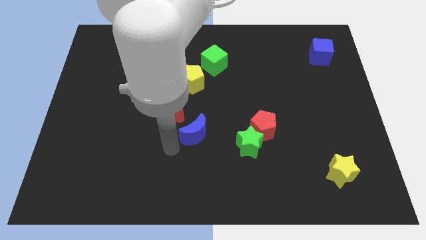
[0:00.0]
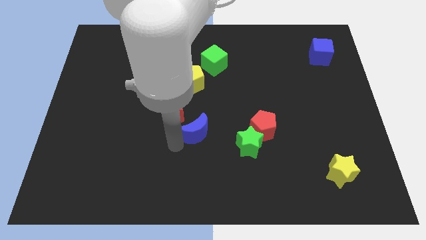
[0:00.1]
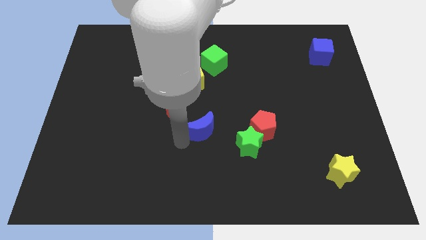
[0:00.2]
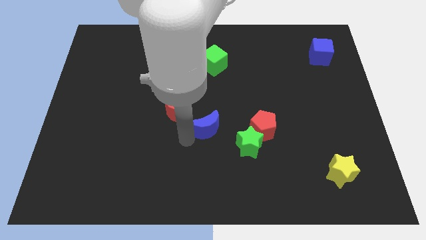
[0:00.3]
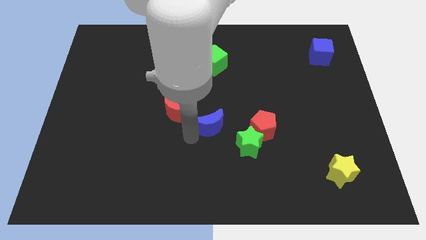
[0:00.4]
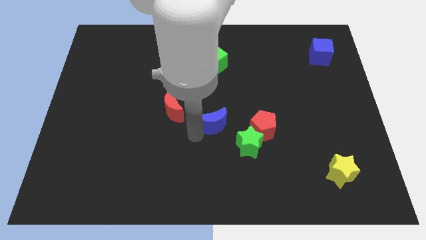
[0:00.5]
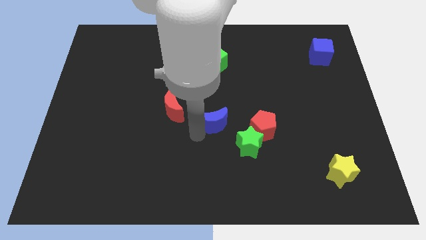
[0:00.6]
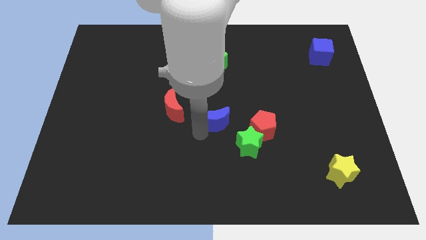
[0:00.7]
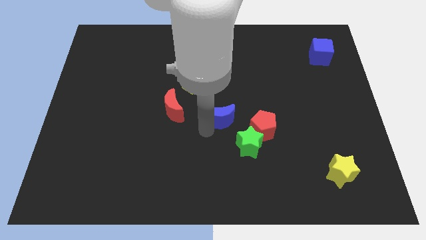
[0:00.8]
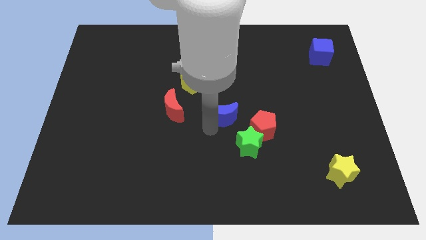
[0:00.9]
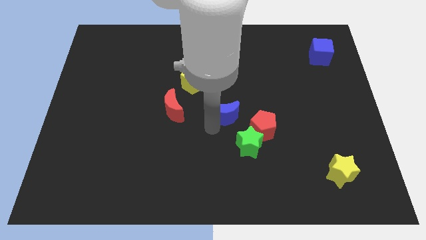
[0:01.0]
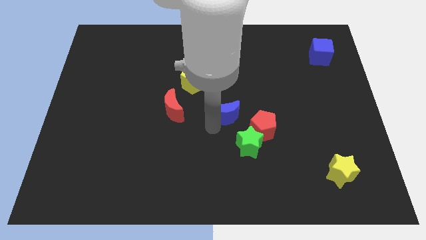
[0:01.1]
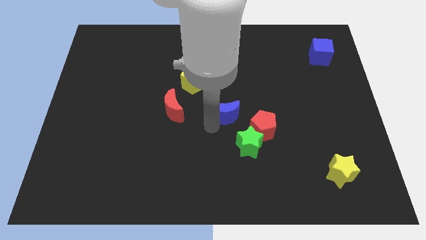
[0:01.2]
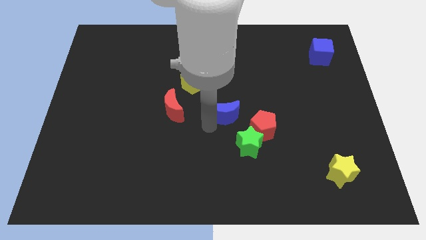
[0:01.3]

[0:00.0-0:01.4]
push blue crescent slightly upwards

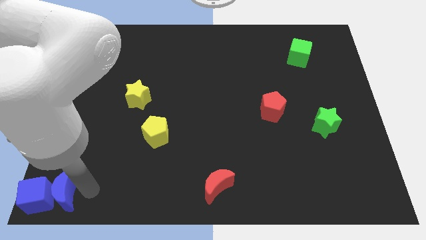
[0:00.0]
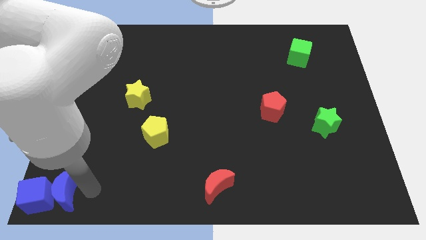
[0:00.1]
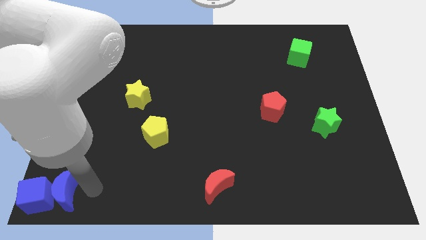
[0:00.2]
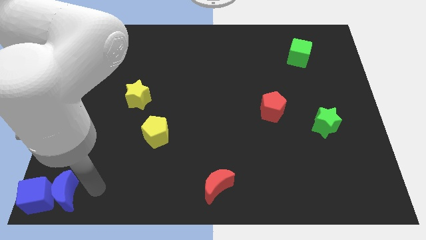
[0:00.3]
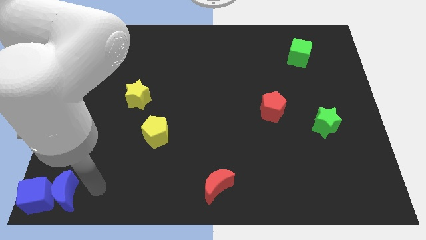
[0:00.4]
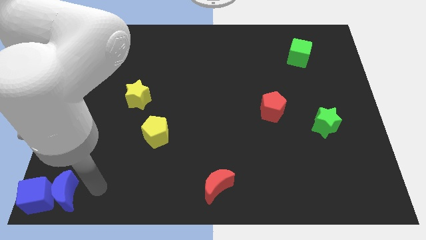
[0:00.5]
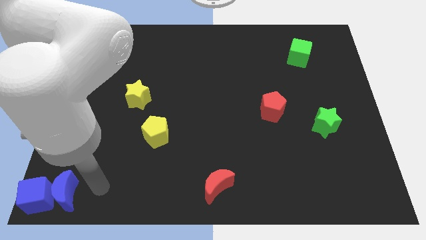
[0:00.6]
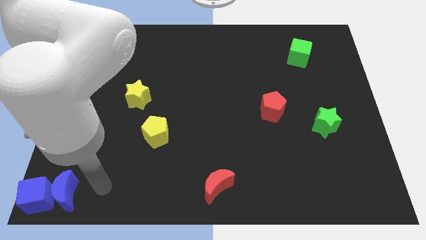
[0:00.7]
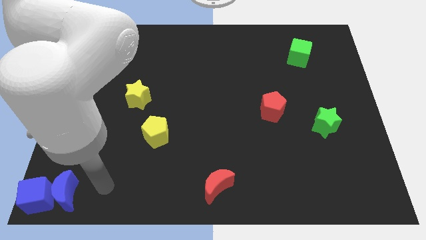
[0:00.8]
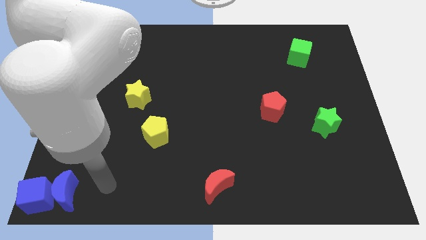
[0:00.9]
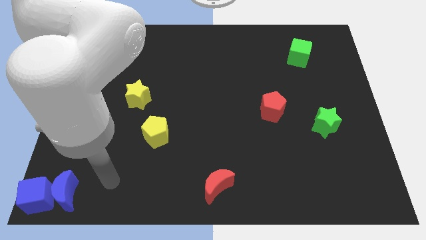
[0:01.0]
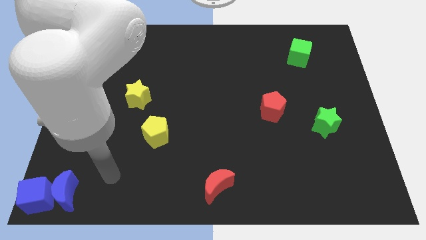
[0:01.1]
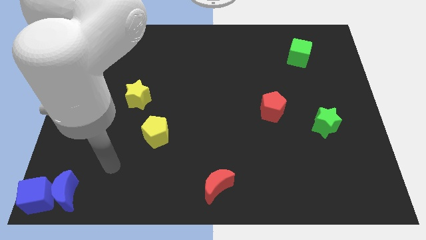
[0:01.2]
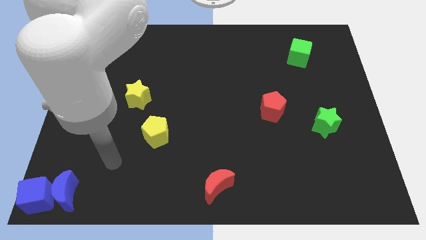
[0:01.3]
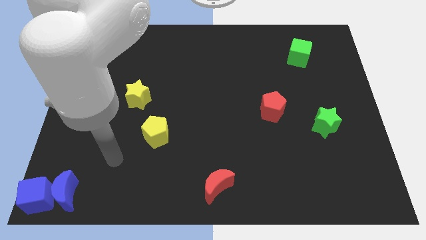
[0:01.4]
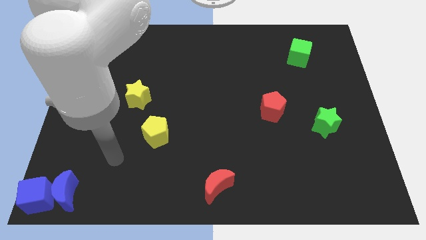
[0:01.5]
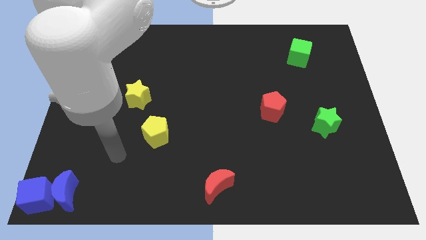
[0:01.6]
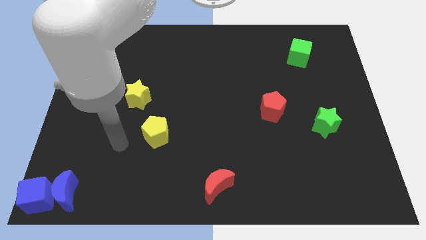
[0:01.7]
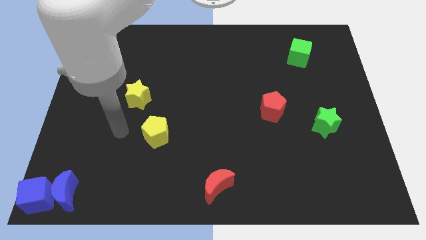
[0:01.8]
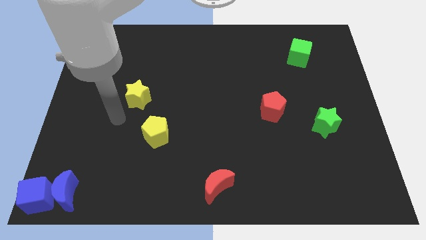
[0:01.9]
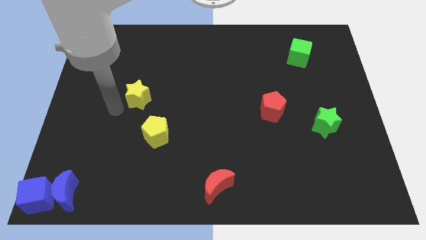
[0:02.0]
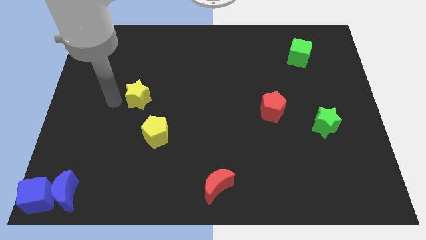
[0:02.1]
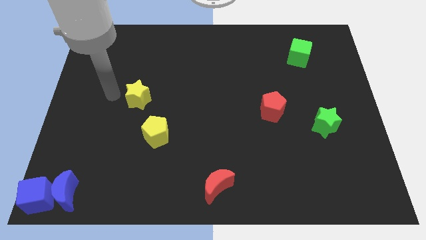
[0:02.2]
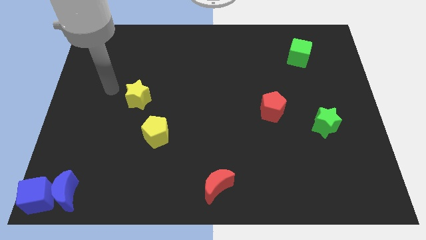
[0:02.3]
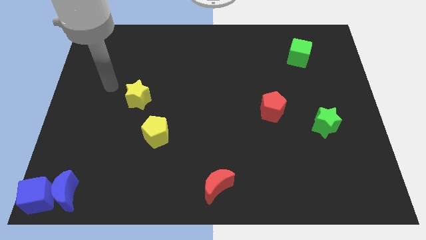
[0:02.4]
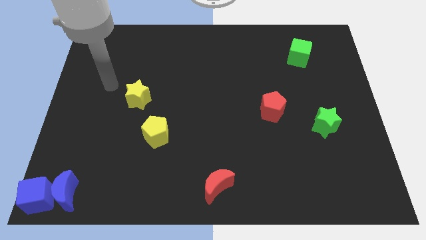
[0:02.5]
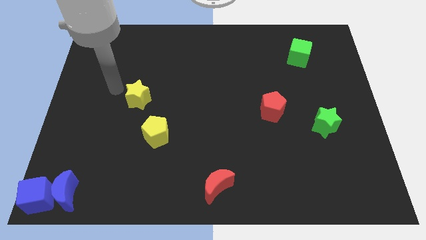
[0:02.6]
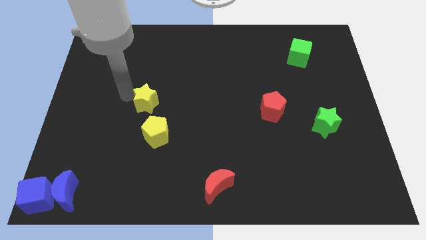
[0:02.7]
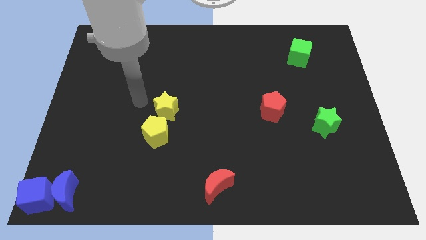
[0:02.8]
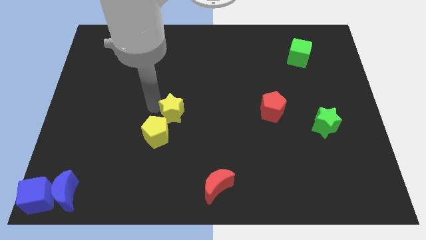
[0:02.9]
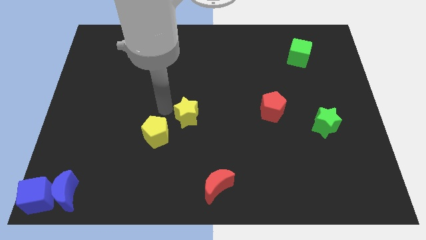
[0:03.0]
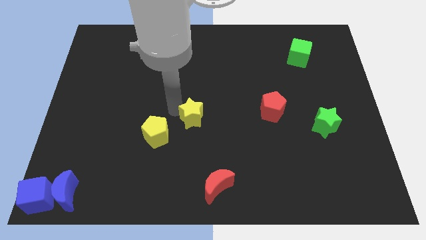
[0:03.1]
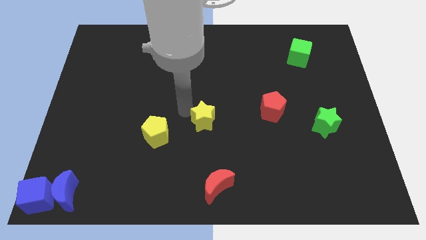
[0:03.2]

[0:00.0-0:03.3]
place the yellow star diagonally towards yellow pentagon

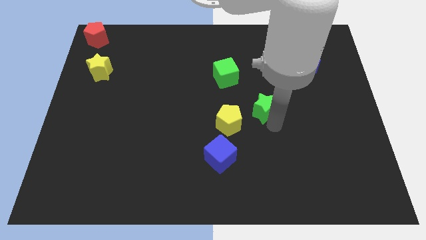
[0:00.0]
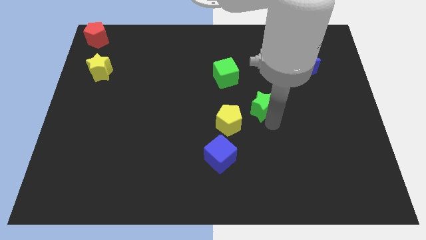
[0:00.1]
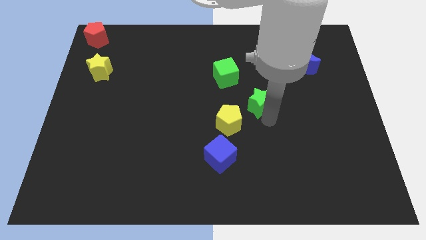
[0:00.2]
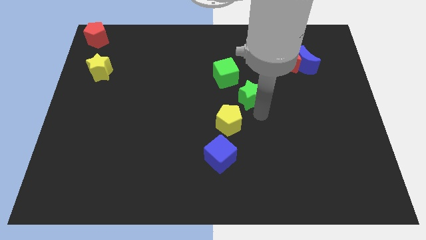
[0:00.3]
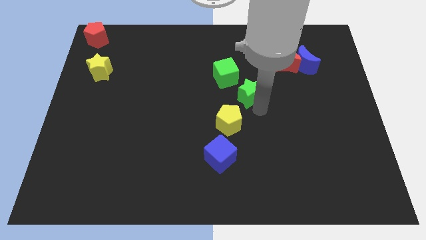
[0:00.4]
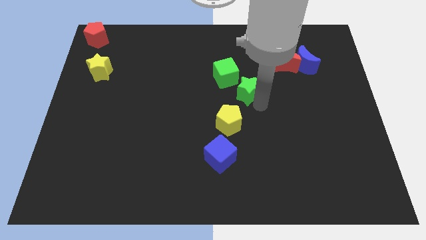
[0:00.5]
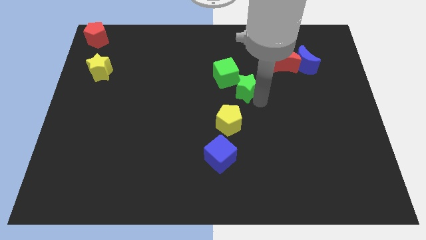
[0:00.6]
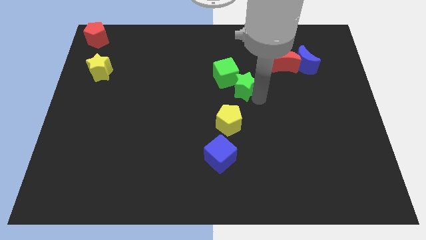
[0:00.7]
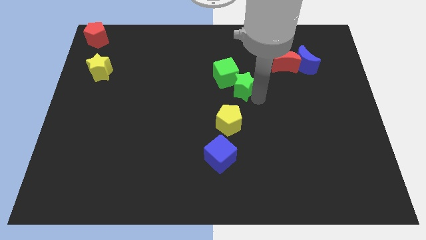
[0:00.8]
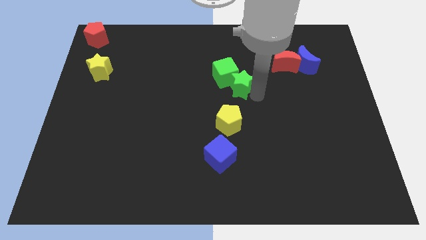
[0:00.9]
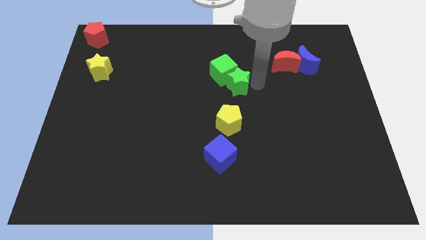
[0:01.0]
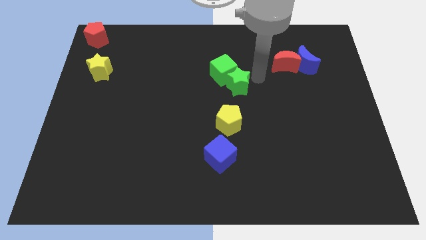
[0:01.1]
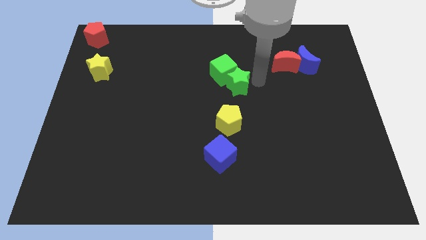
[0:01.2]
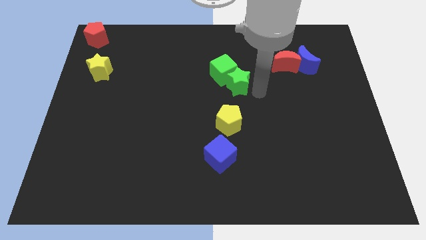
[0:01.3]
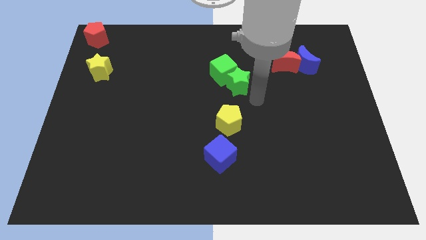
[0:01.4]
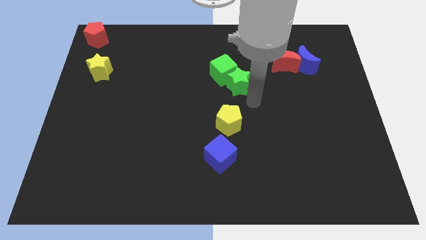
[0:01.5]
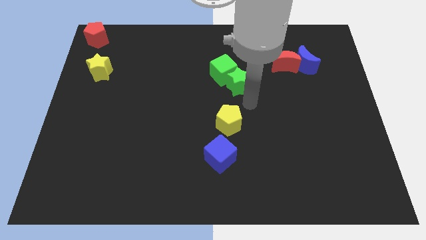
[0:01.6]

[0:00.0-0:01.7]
push the green star in the green cube

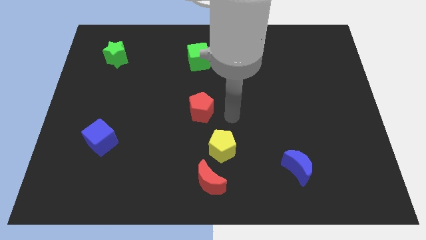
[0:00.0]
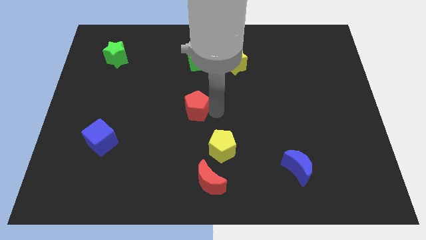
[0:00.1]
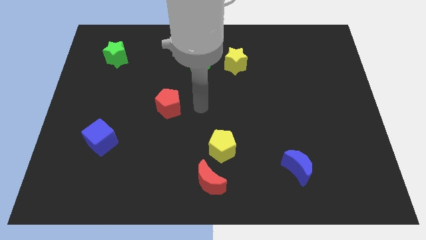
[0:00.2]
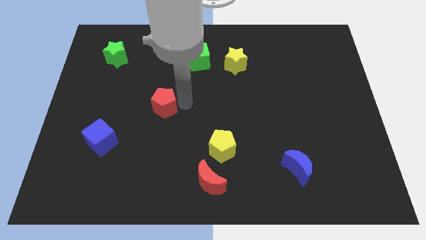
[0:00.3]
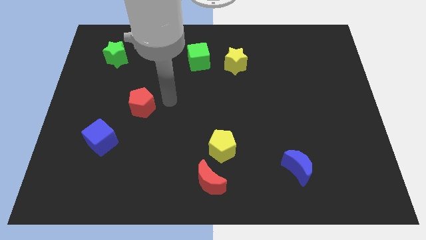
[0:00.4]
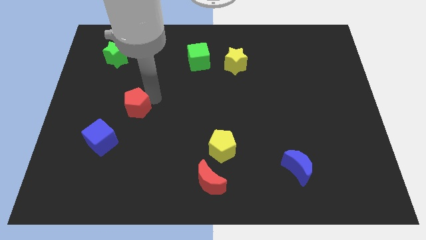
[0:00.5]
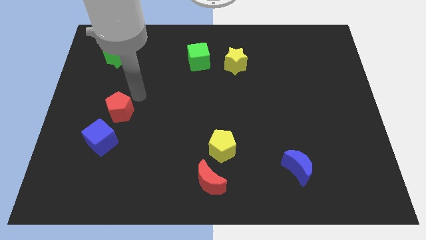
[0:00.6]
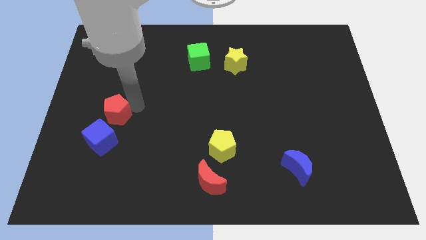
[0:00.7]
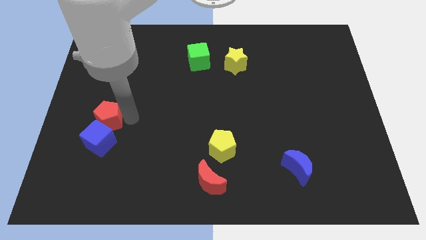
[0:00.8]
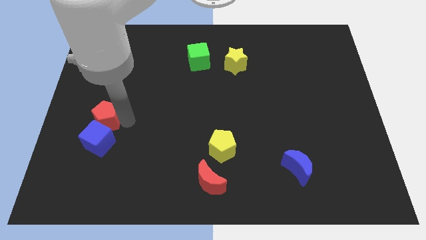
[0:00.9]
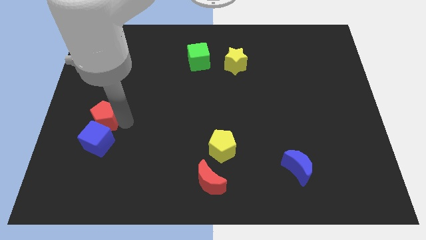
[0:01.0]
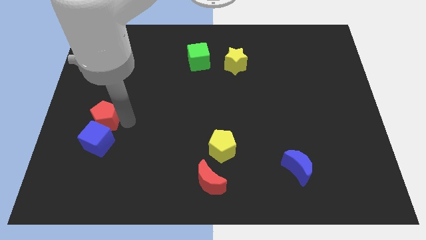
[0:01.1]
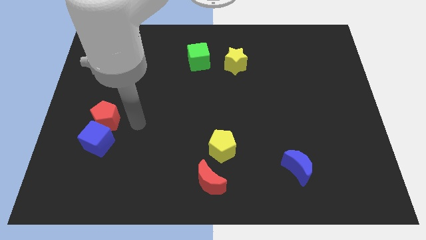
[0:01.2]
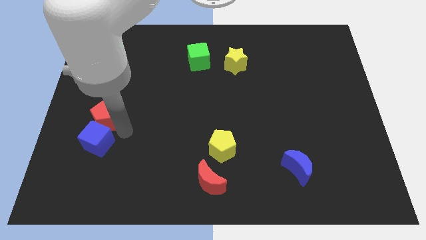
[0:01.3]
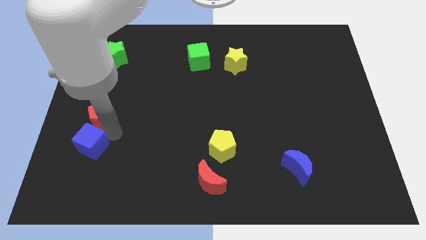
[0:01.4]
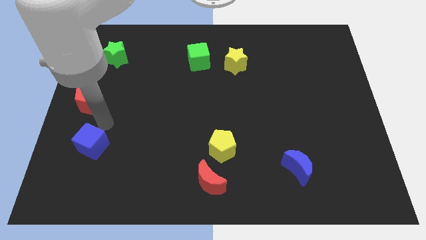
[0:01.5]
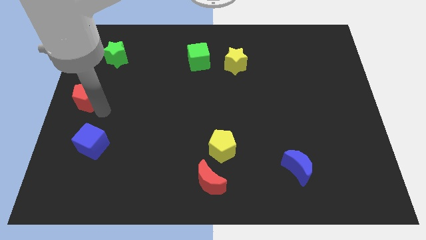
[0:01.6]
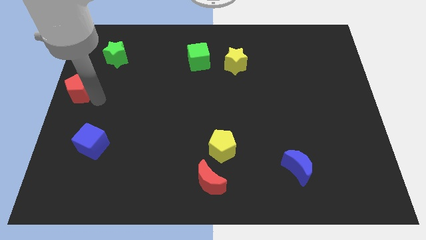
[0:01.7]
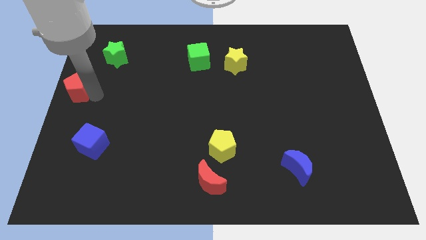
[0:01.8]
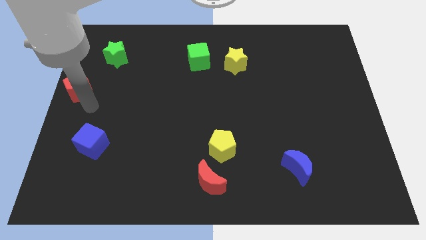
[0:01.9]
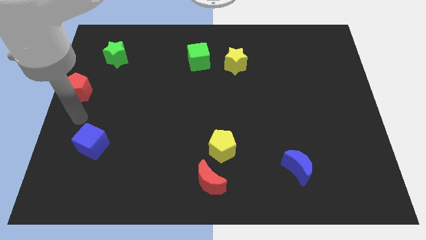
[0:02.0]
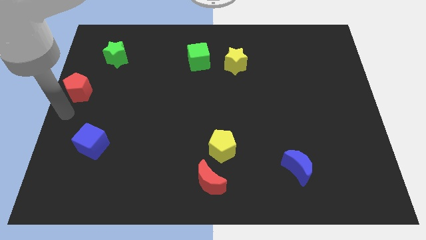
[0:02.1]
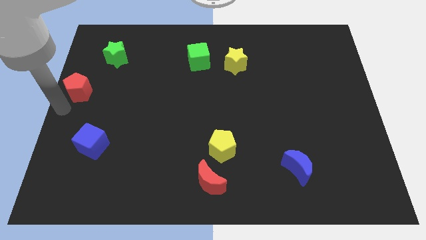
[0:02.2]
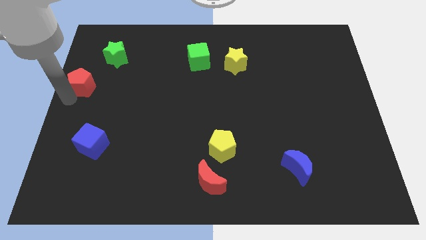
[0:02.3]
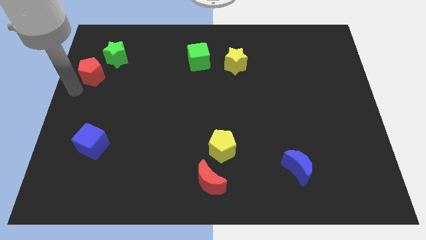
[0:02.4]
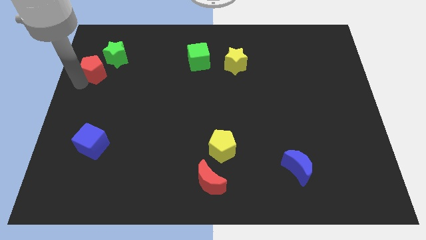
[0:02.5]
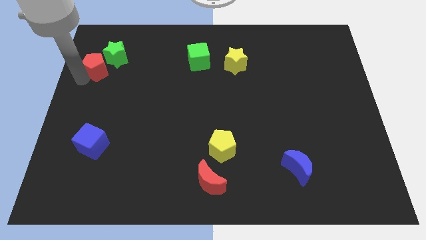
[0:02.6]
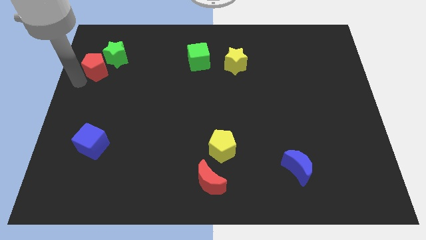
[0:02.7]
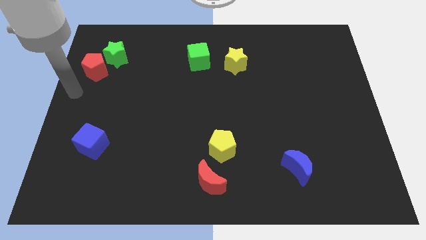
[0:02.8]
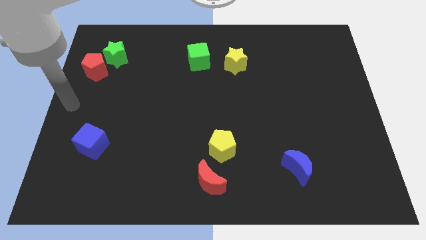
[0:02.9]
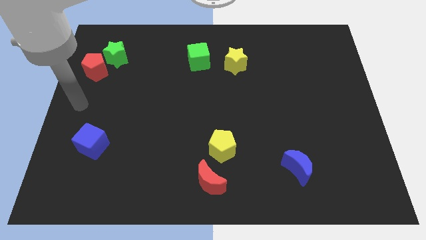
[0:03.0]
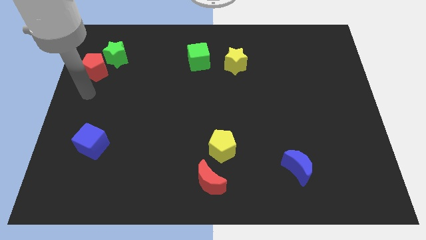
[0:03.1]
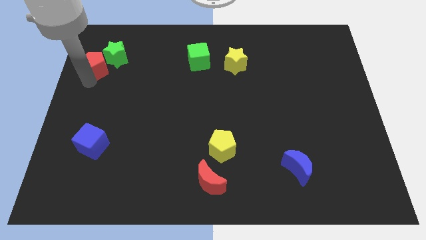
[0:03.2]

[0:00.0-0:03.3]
drag the red pentagon diagonally top left to the blue cube
